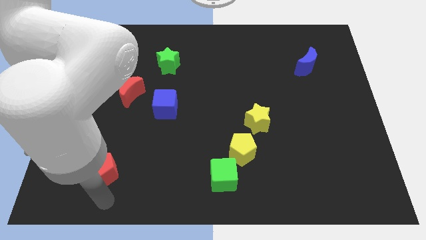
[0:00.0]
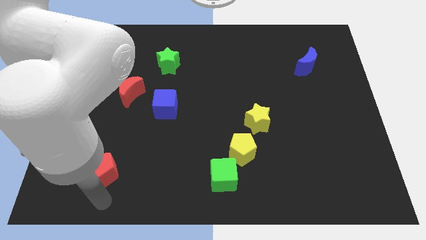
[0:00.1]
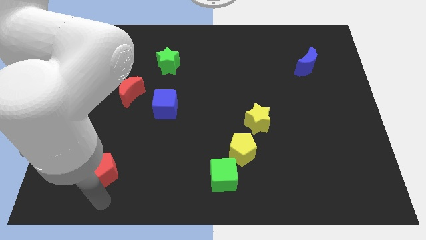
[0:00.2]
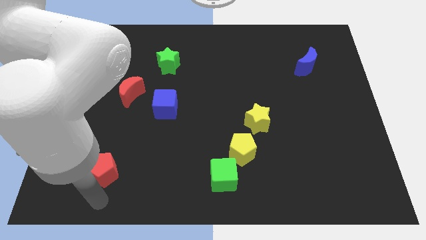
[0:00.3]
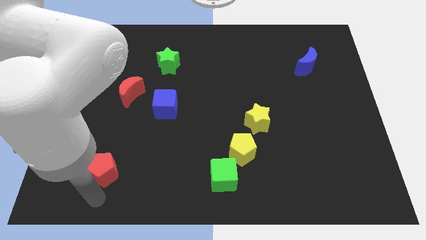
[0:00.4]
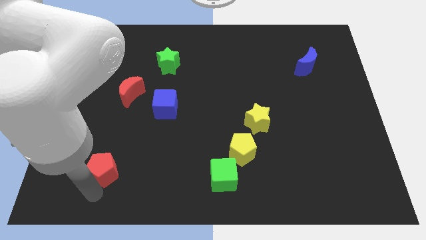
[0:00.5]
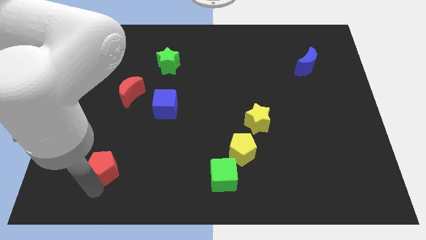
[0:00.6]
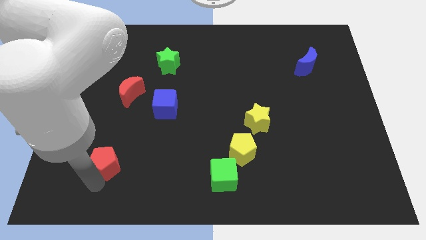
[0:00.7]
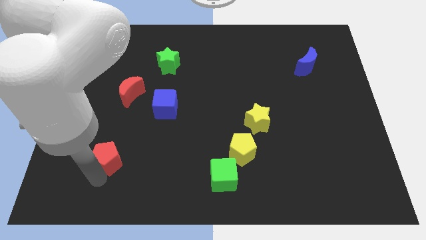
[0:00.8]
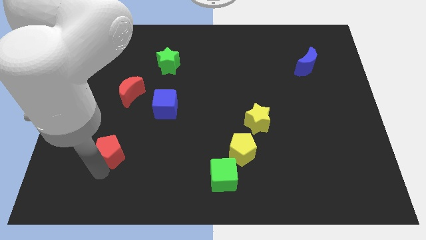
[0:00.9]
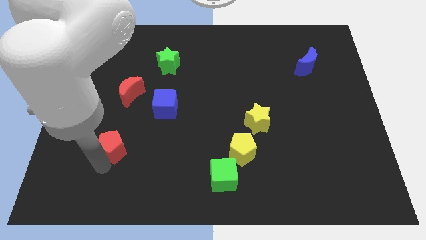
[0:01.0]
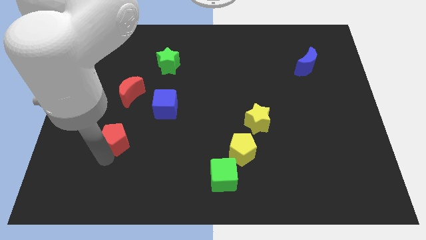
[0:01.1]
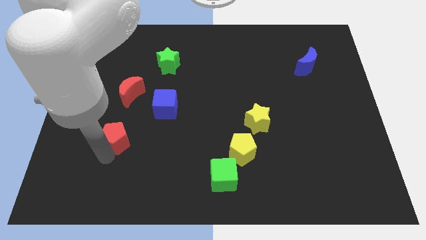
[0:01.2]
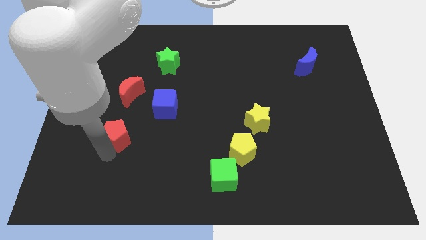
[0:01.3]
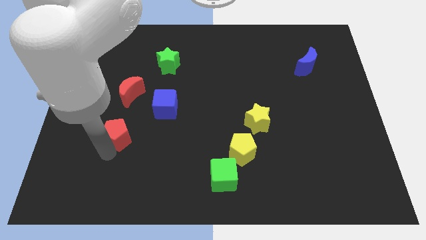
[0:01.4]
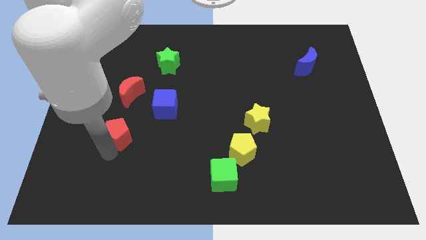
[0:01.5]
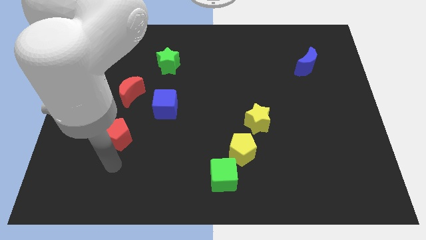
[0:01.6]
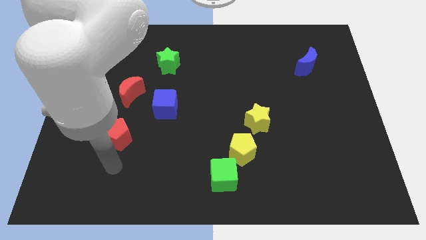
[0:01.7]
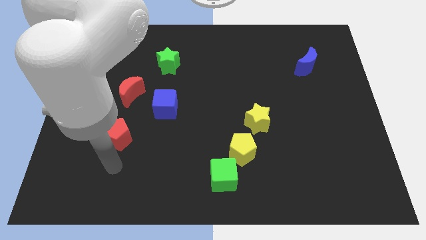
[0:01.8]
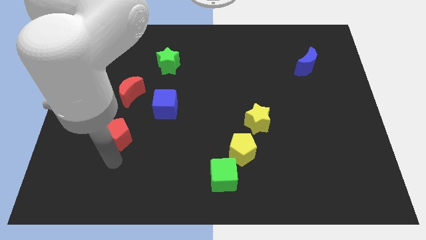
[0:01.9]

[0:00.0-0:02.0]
place the red pentagon diagonally bottom left to the blue cube

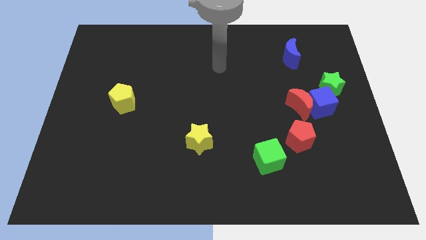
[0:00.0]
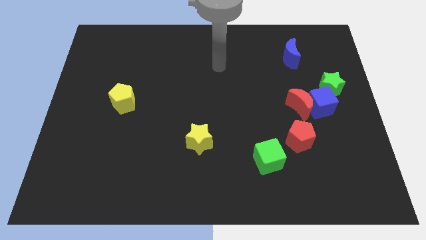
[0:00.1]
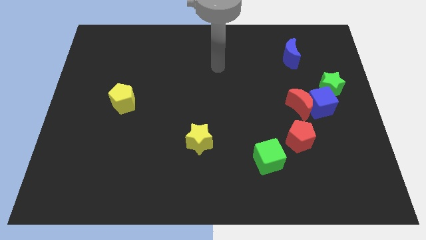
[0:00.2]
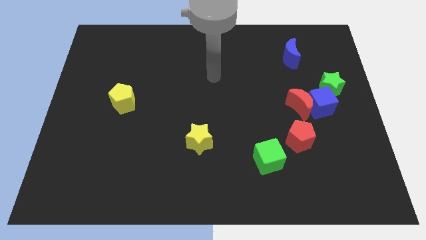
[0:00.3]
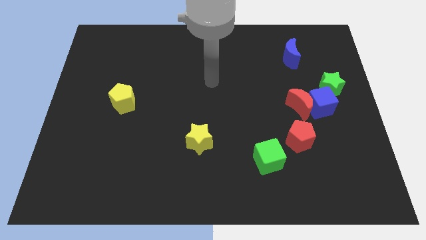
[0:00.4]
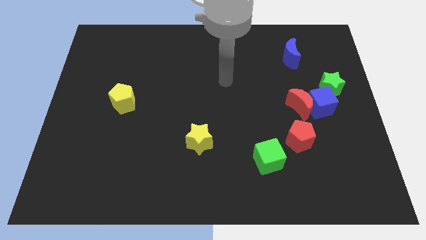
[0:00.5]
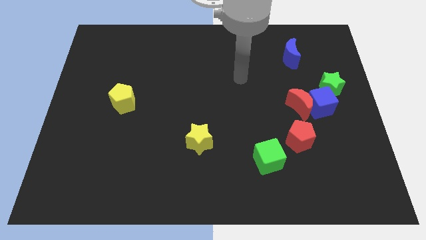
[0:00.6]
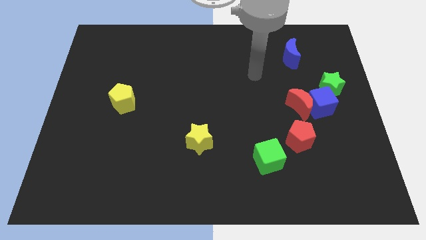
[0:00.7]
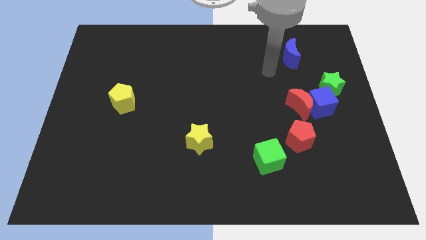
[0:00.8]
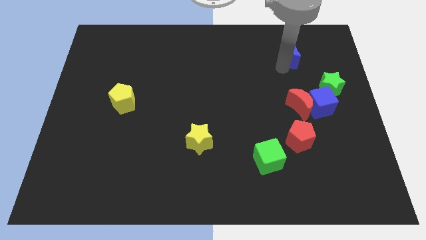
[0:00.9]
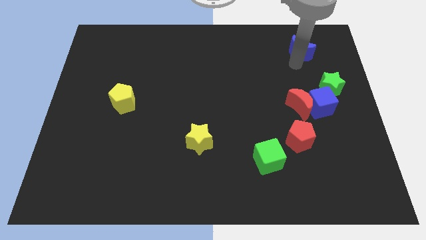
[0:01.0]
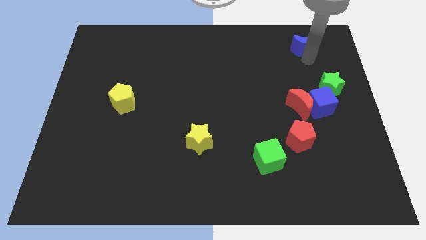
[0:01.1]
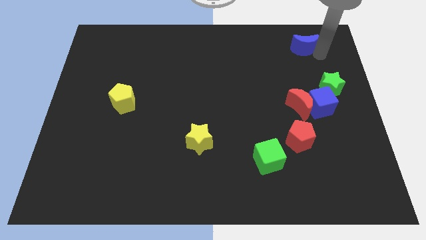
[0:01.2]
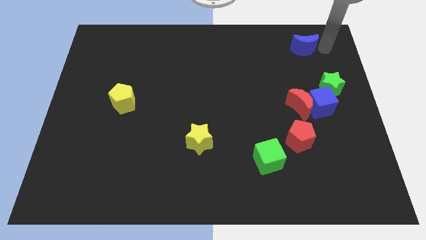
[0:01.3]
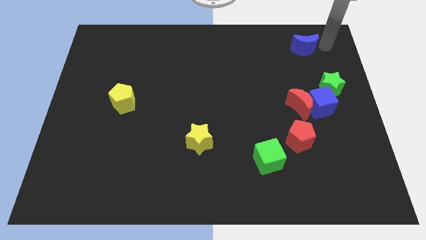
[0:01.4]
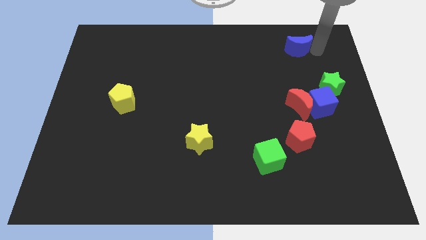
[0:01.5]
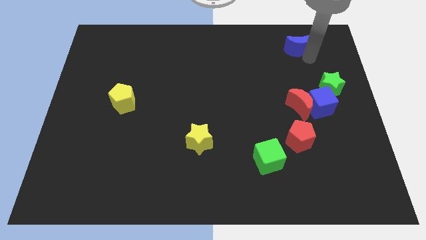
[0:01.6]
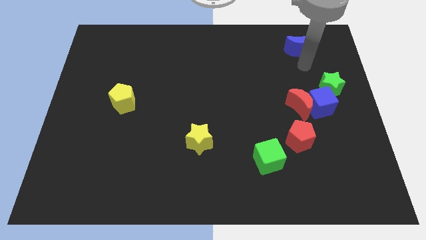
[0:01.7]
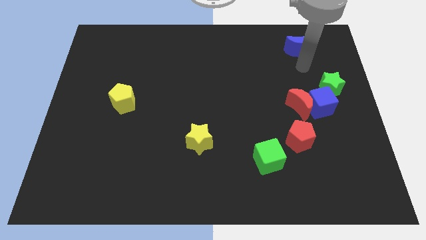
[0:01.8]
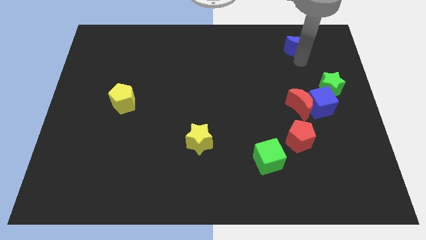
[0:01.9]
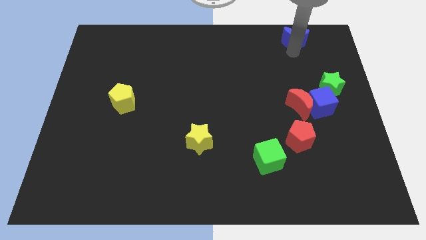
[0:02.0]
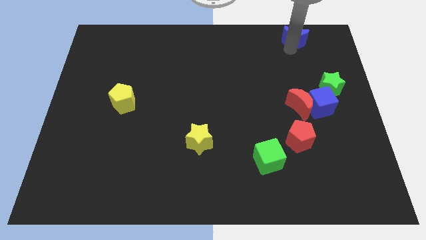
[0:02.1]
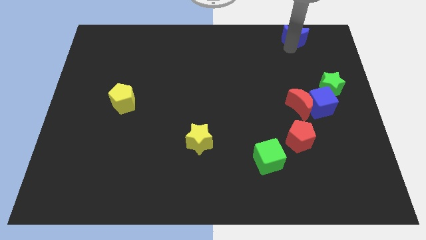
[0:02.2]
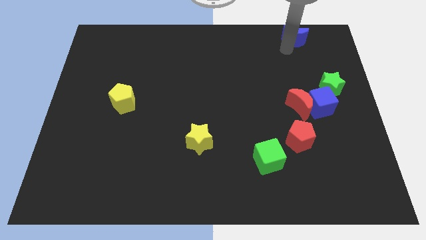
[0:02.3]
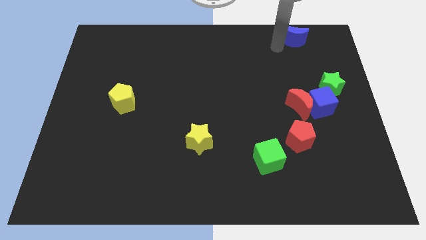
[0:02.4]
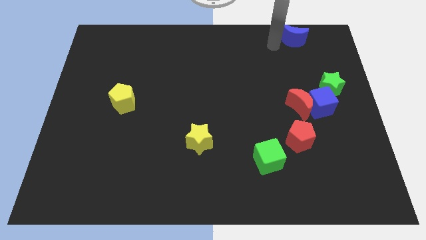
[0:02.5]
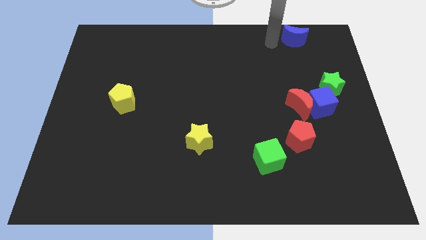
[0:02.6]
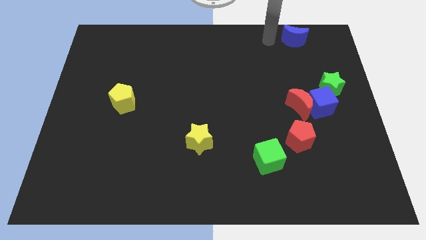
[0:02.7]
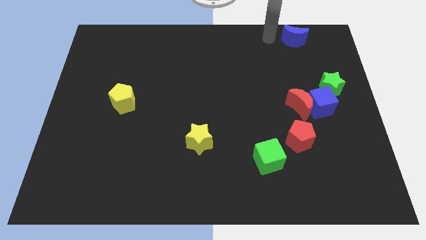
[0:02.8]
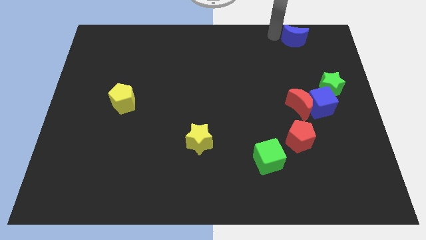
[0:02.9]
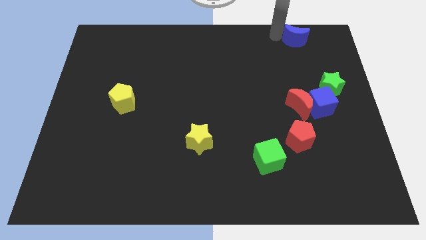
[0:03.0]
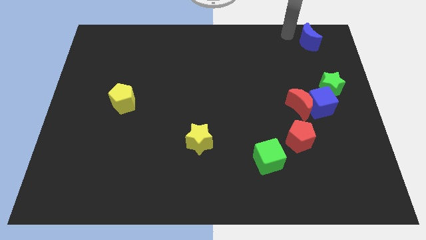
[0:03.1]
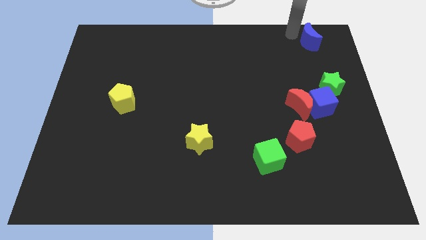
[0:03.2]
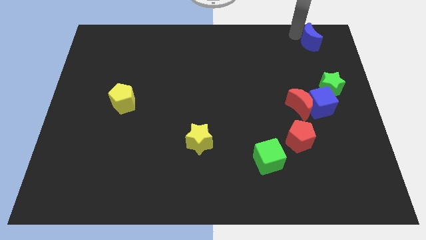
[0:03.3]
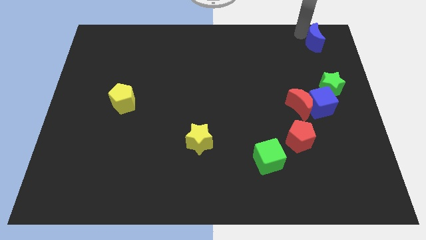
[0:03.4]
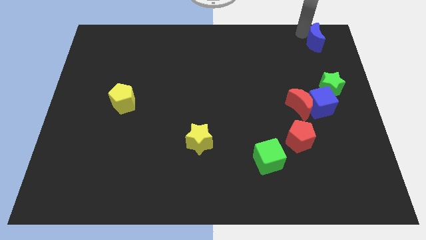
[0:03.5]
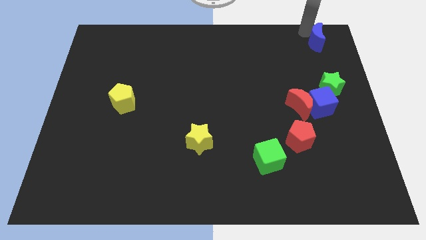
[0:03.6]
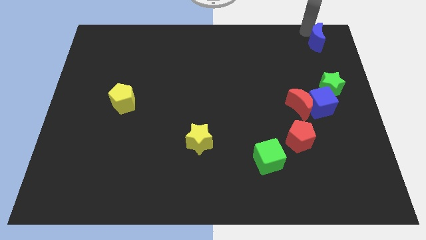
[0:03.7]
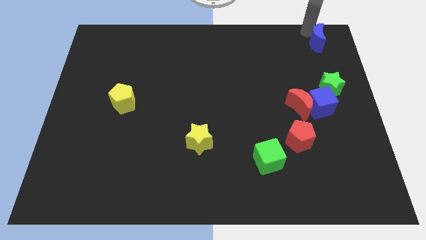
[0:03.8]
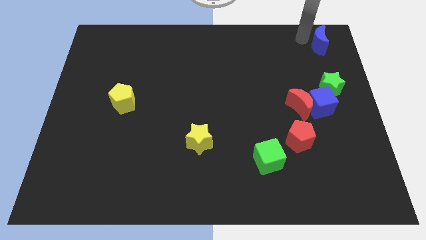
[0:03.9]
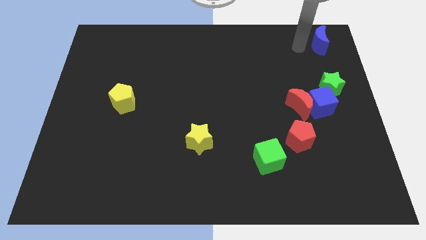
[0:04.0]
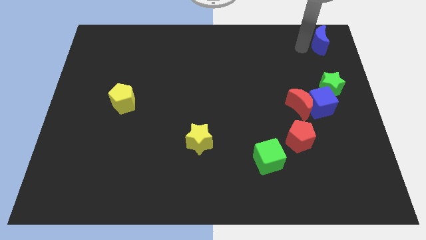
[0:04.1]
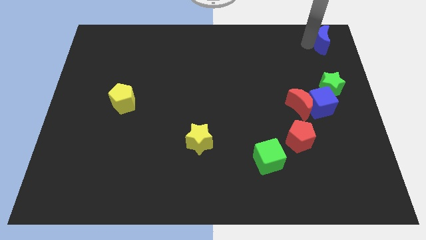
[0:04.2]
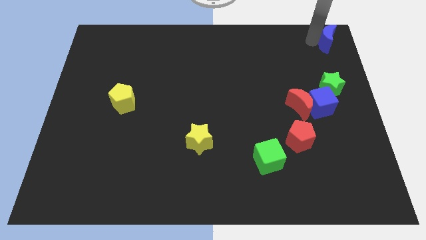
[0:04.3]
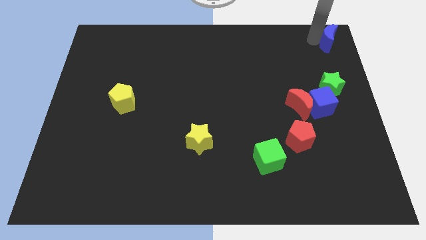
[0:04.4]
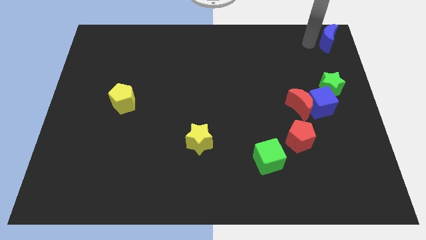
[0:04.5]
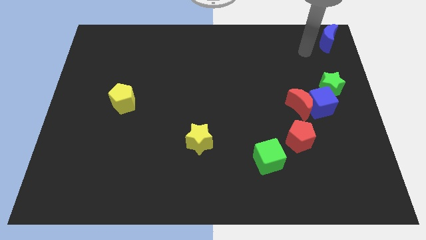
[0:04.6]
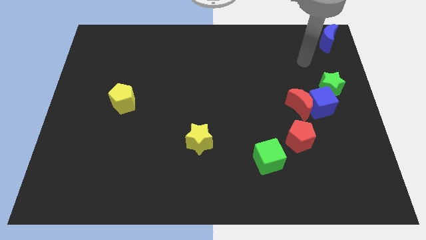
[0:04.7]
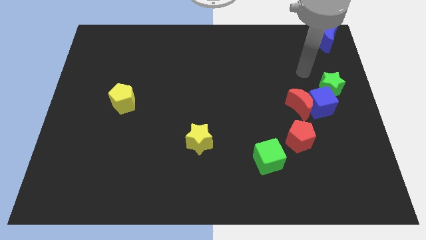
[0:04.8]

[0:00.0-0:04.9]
place the blue moon diagonally top right to the red moon

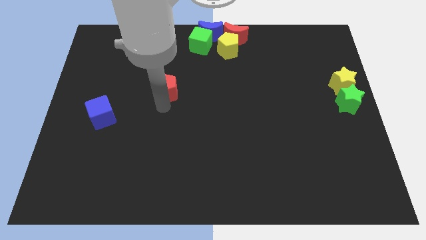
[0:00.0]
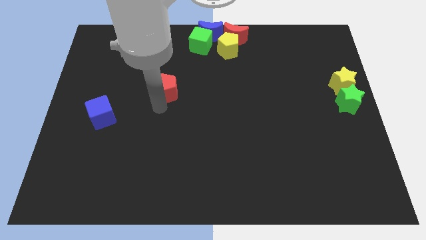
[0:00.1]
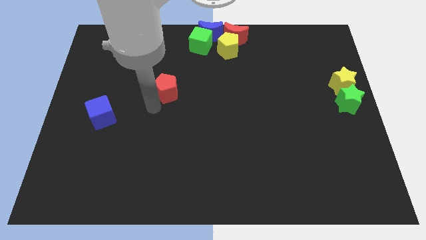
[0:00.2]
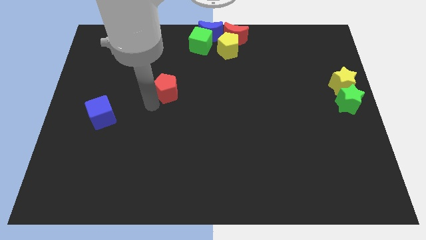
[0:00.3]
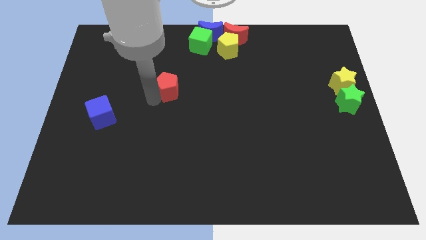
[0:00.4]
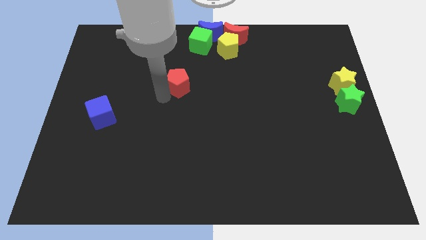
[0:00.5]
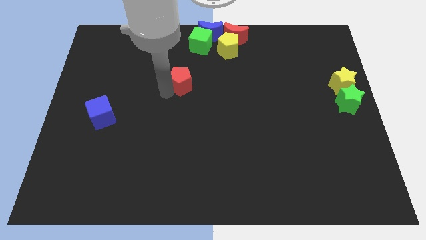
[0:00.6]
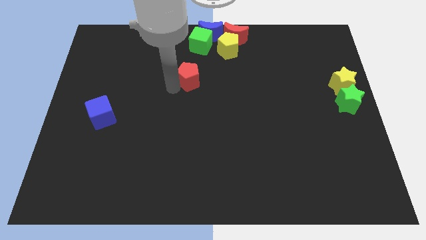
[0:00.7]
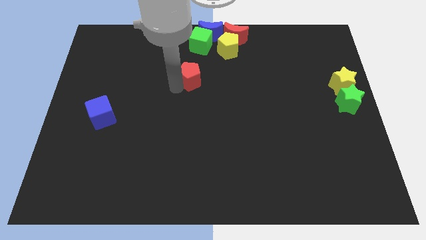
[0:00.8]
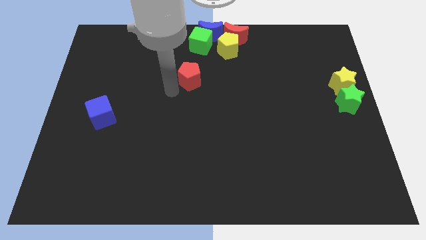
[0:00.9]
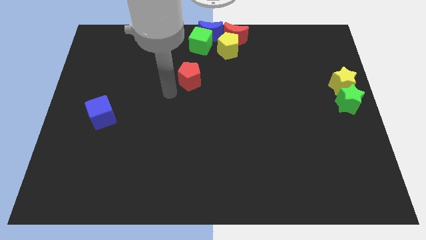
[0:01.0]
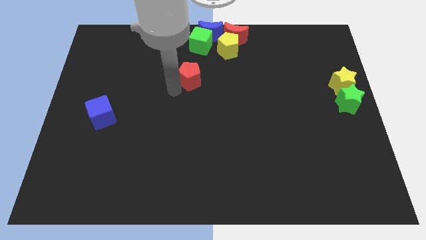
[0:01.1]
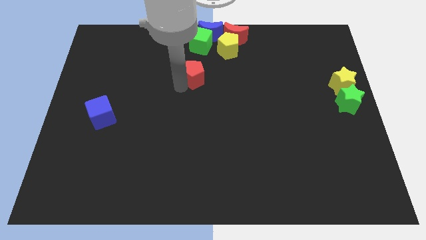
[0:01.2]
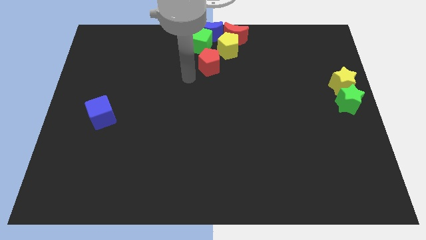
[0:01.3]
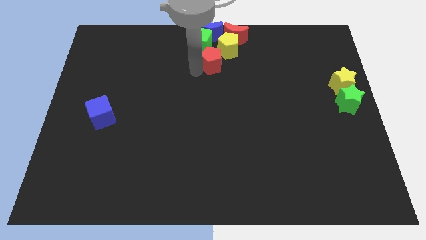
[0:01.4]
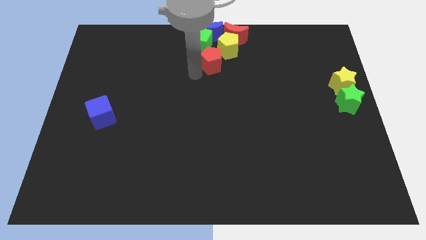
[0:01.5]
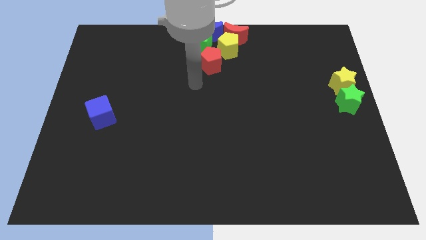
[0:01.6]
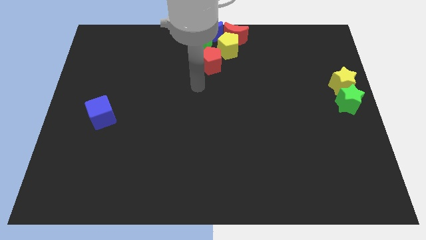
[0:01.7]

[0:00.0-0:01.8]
add the red pentagon to the group of blocks at the top center of the board

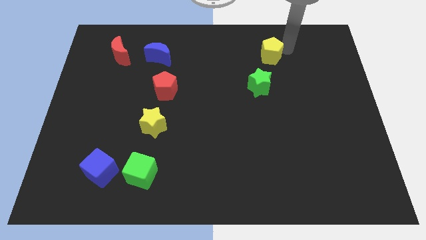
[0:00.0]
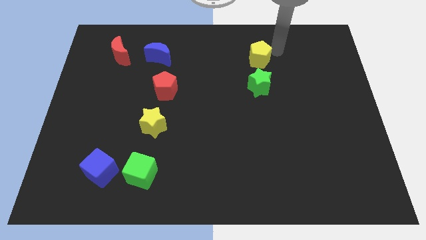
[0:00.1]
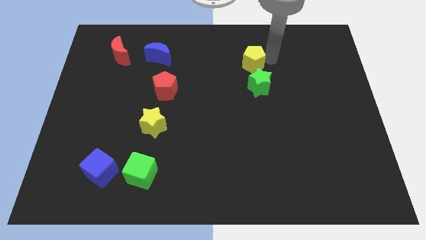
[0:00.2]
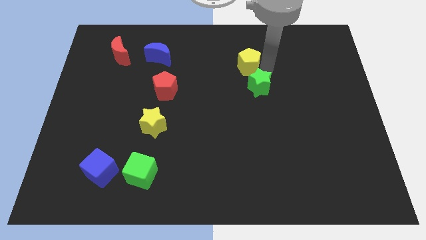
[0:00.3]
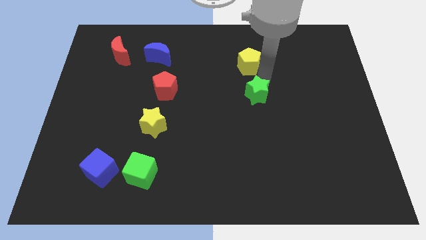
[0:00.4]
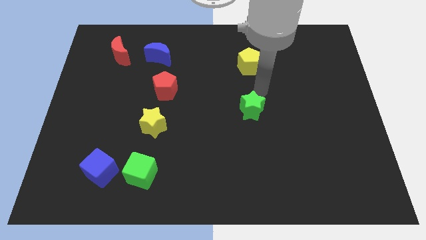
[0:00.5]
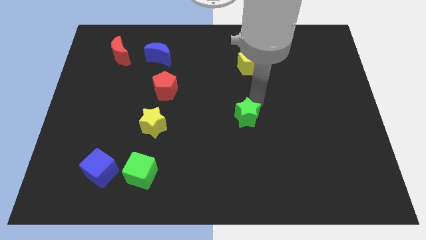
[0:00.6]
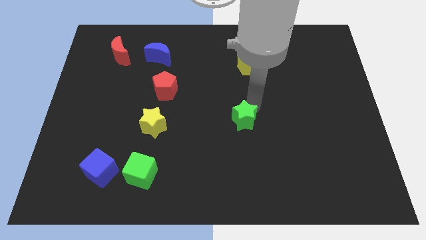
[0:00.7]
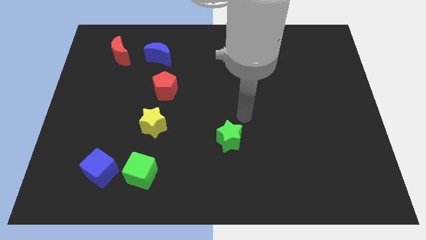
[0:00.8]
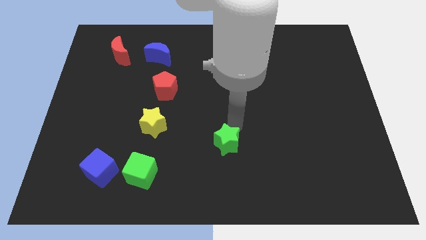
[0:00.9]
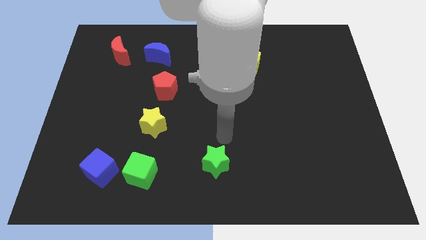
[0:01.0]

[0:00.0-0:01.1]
push the yellow pentagon to the left
